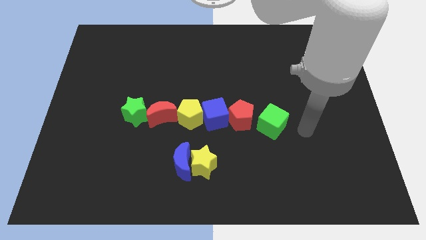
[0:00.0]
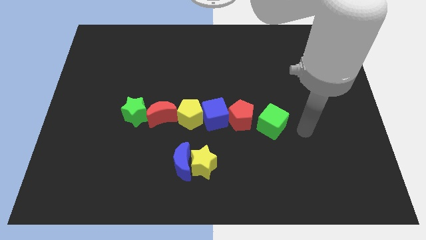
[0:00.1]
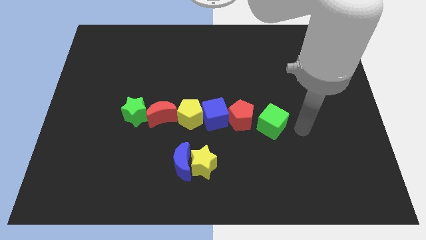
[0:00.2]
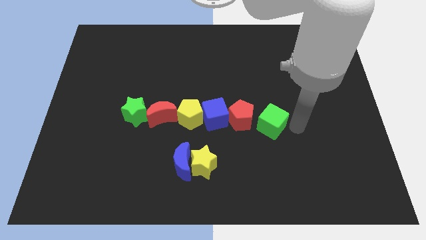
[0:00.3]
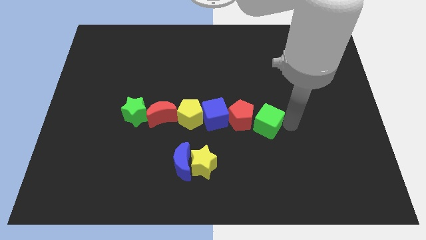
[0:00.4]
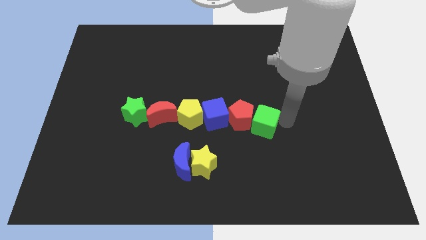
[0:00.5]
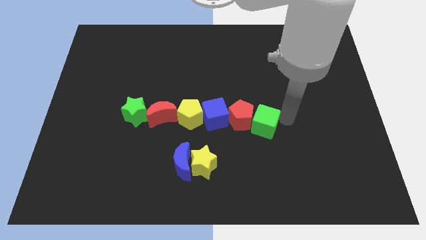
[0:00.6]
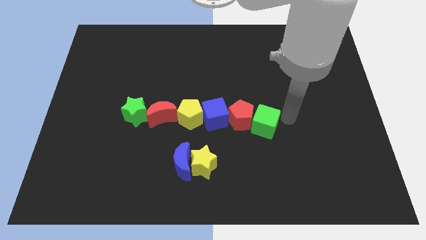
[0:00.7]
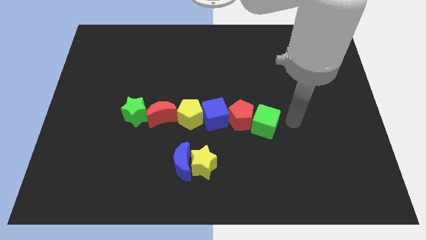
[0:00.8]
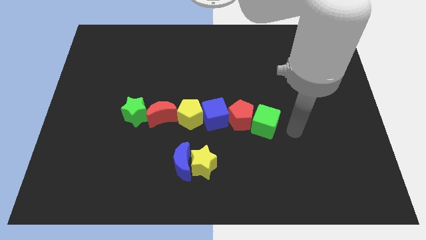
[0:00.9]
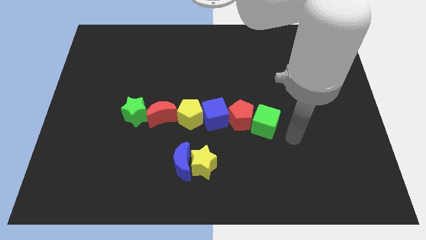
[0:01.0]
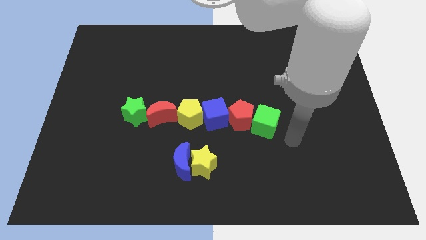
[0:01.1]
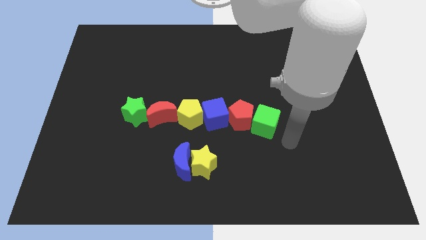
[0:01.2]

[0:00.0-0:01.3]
push the green cube to the right of the red pentagon

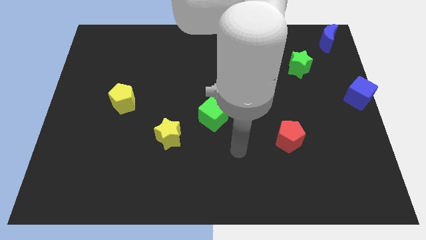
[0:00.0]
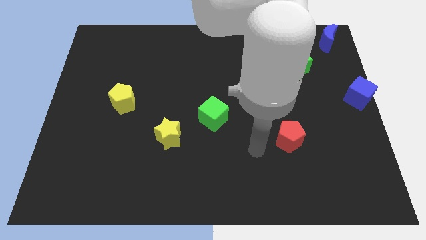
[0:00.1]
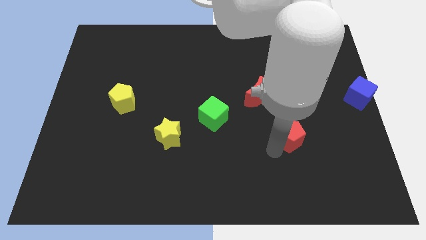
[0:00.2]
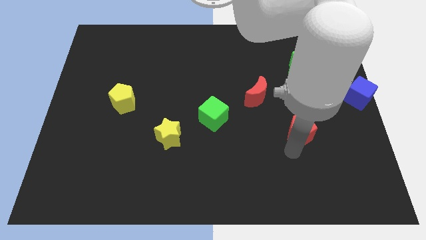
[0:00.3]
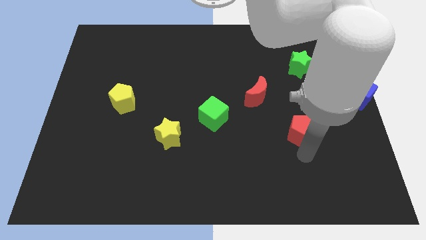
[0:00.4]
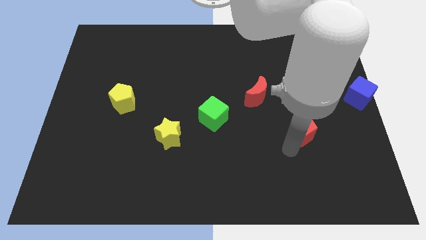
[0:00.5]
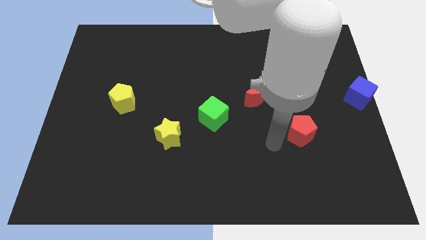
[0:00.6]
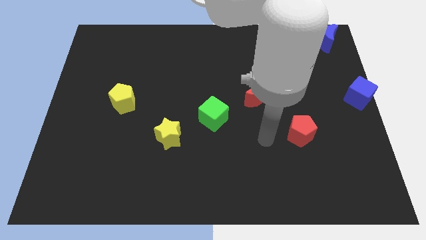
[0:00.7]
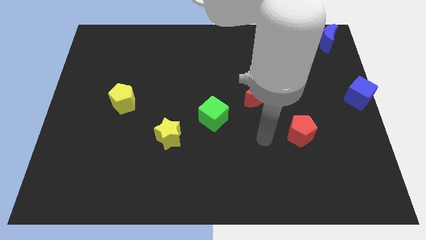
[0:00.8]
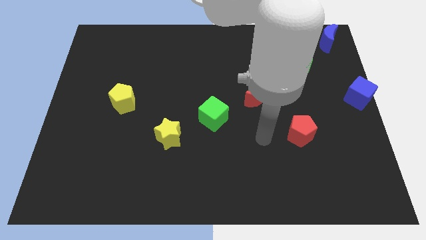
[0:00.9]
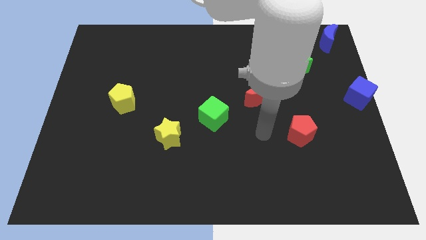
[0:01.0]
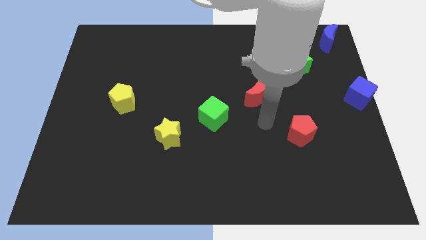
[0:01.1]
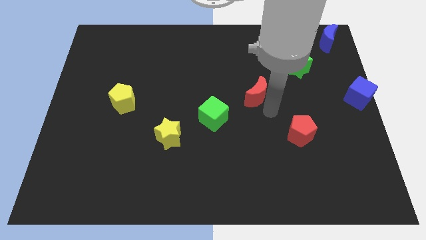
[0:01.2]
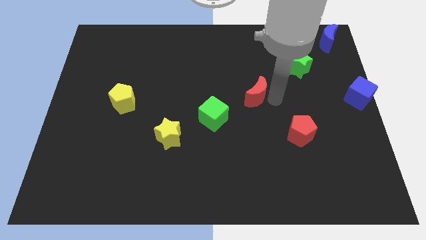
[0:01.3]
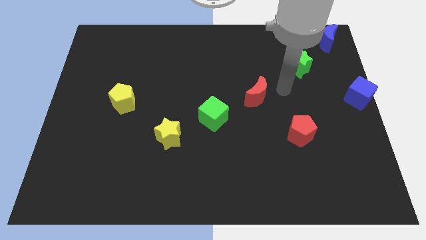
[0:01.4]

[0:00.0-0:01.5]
move the red pentagon slightly to the right of the board

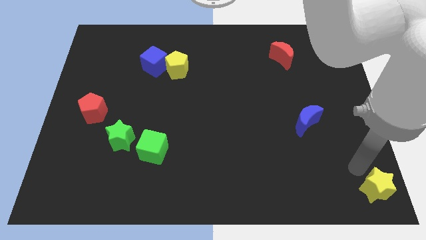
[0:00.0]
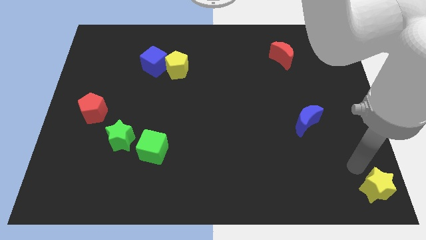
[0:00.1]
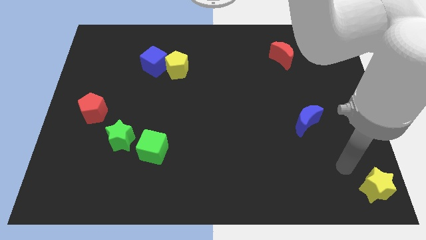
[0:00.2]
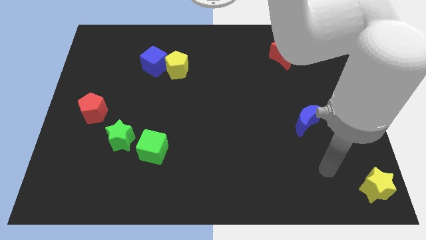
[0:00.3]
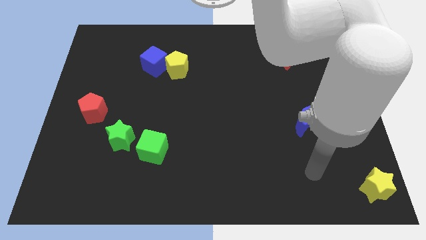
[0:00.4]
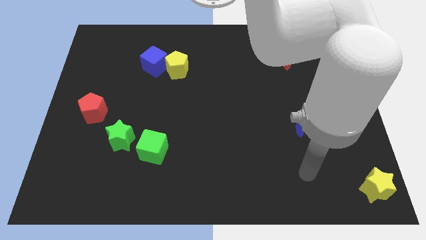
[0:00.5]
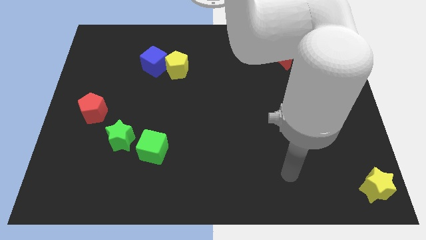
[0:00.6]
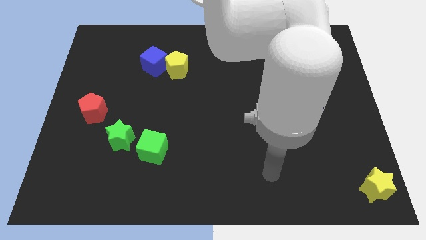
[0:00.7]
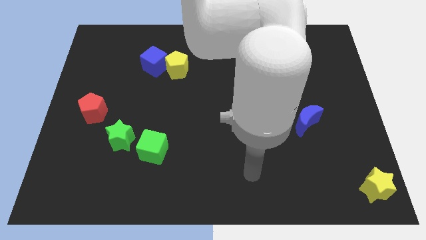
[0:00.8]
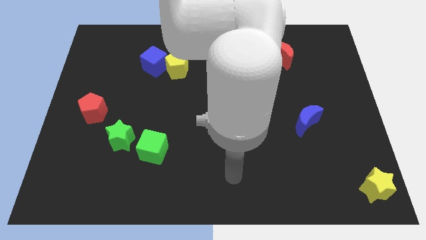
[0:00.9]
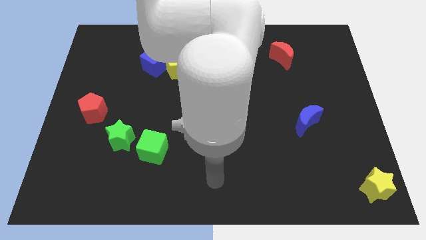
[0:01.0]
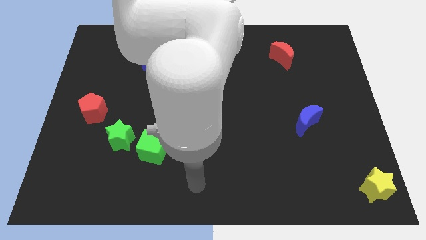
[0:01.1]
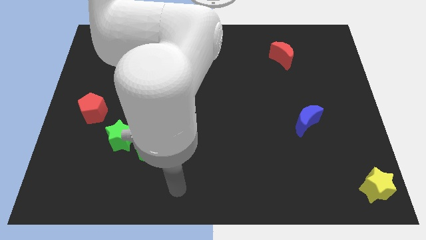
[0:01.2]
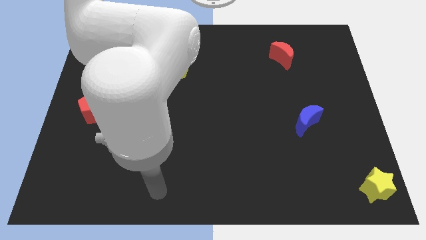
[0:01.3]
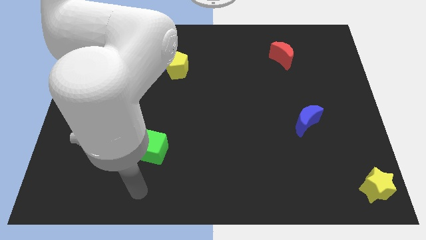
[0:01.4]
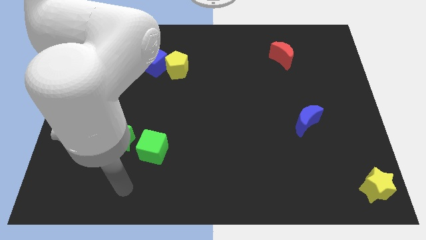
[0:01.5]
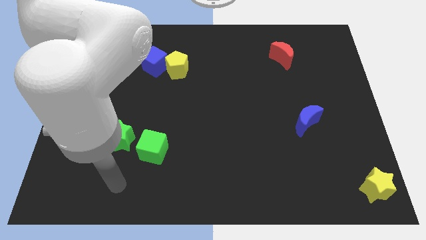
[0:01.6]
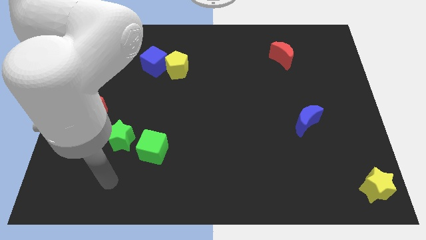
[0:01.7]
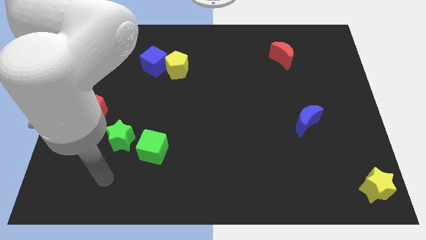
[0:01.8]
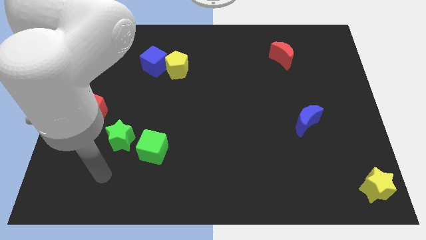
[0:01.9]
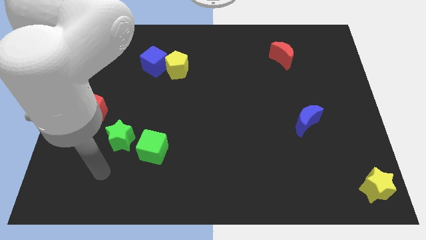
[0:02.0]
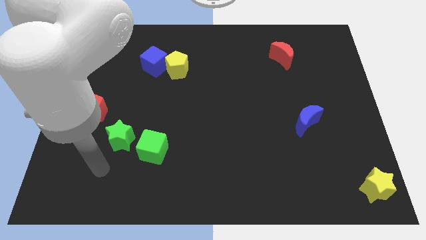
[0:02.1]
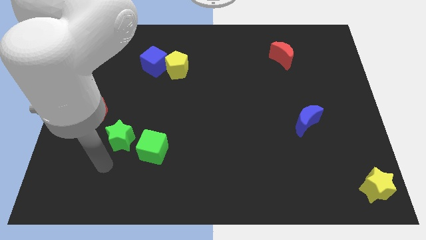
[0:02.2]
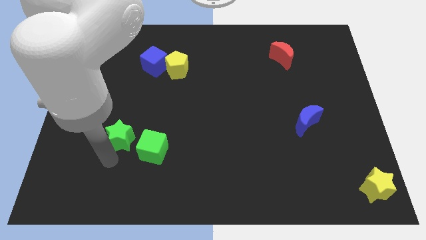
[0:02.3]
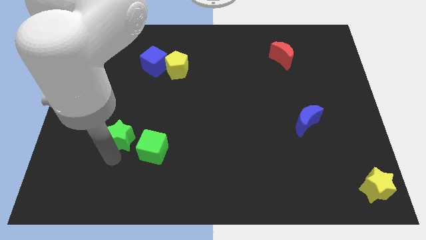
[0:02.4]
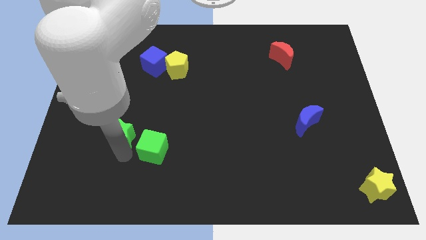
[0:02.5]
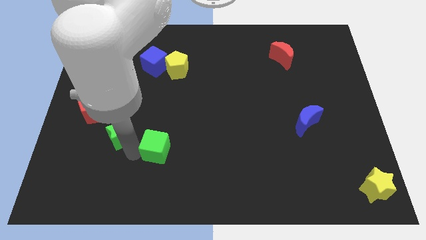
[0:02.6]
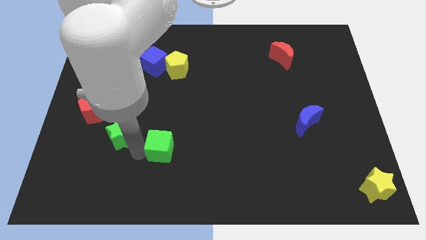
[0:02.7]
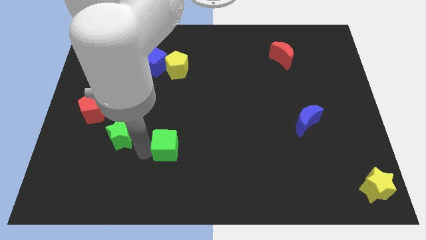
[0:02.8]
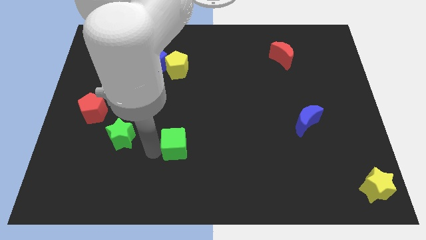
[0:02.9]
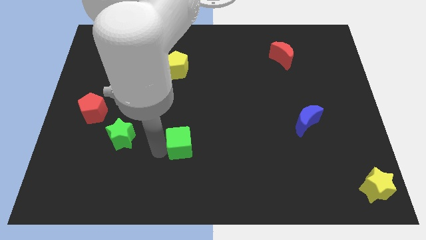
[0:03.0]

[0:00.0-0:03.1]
slide the green cube slightly to the right

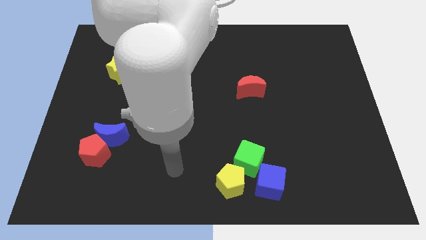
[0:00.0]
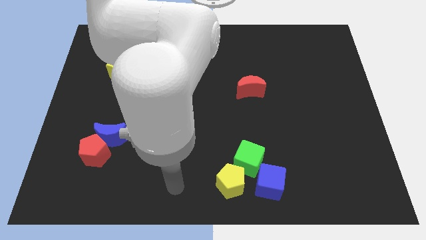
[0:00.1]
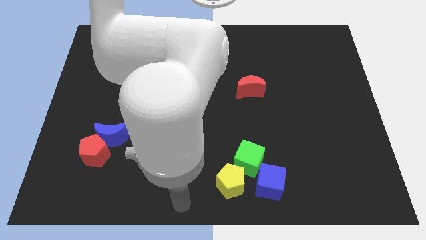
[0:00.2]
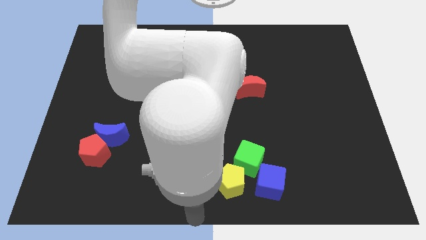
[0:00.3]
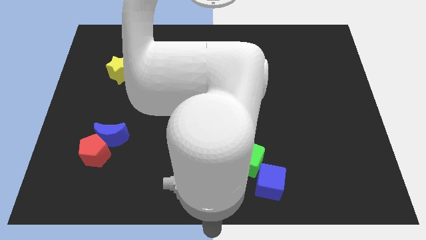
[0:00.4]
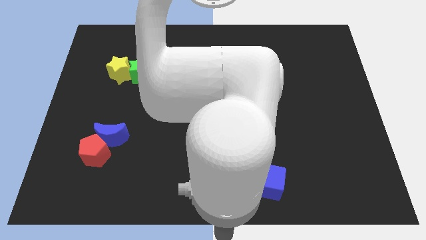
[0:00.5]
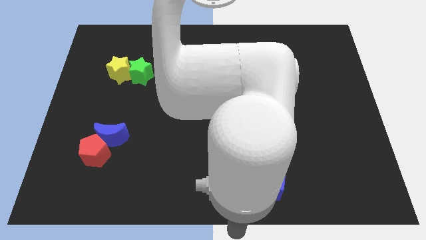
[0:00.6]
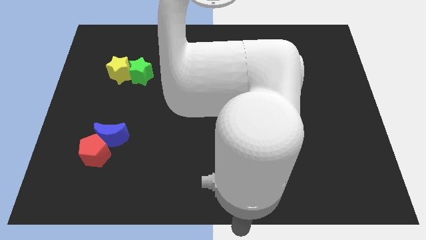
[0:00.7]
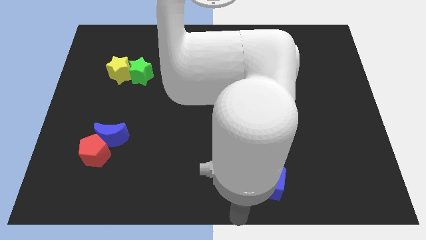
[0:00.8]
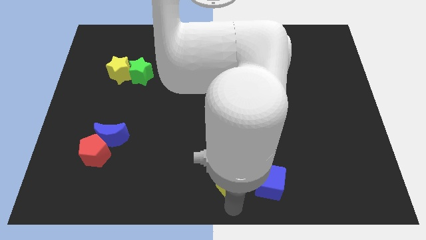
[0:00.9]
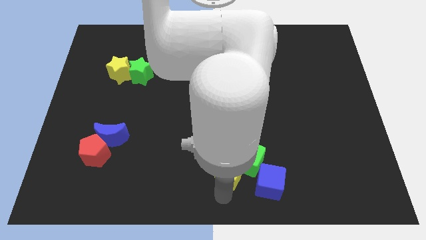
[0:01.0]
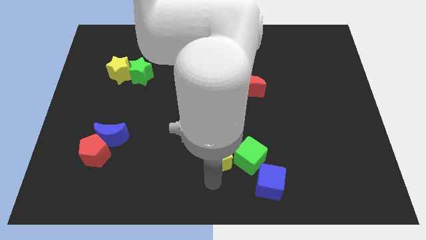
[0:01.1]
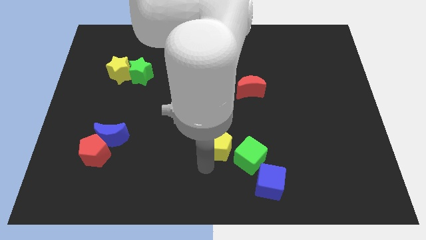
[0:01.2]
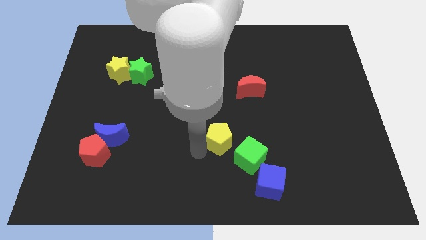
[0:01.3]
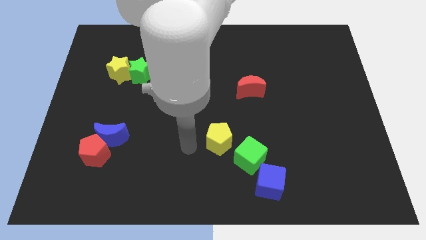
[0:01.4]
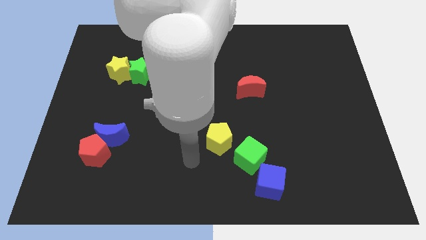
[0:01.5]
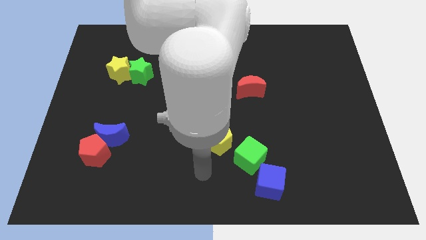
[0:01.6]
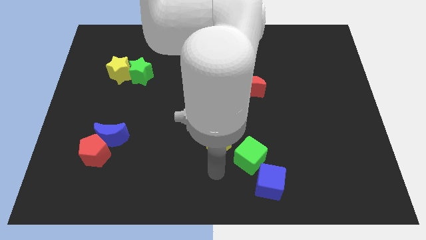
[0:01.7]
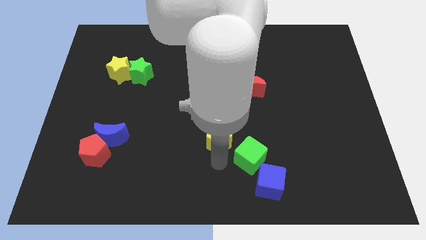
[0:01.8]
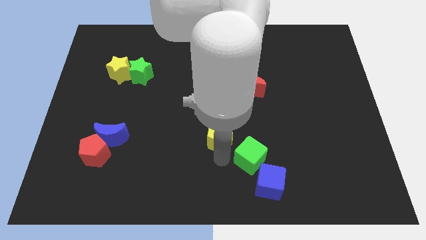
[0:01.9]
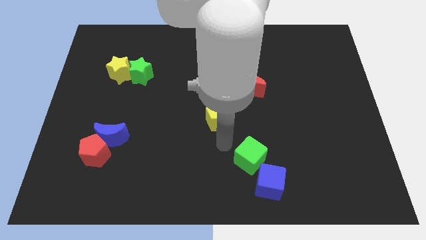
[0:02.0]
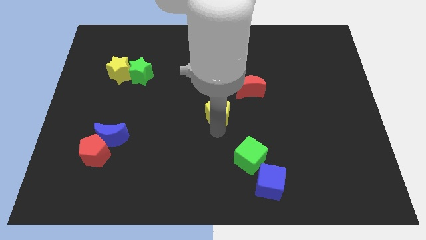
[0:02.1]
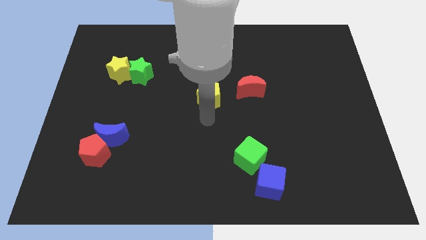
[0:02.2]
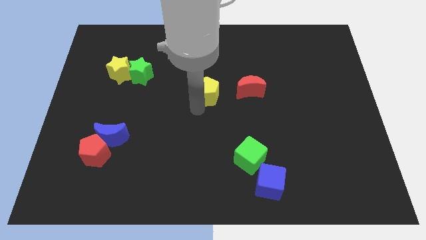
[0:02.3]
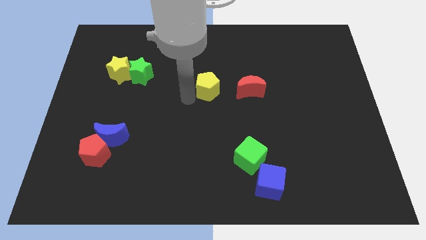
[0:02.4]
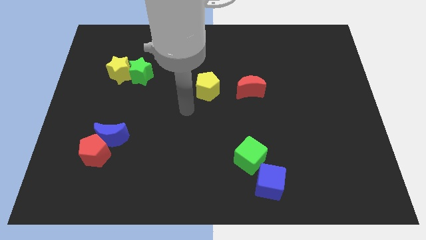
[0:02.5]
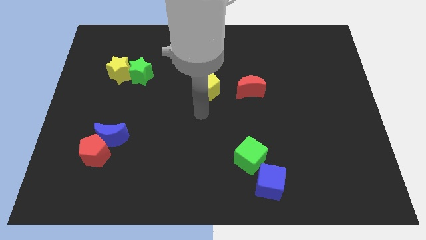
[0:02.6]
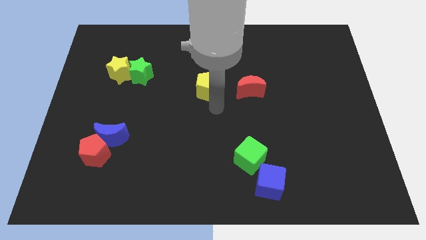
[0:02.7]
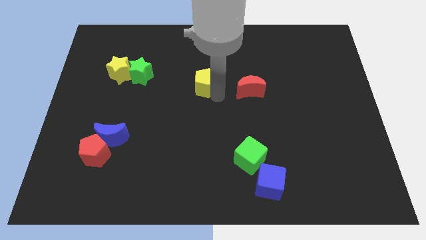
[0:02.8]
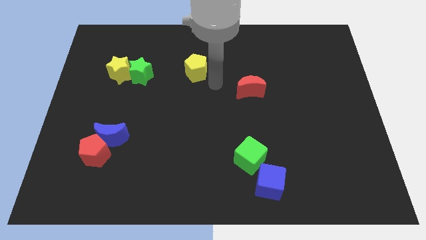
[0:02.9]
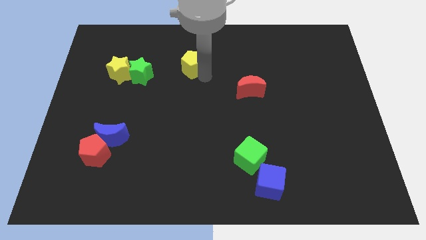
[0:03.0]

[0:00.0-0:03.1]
push the yellow pentagon upward
